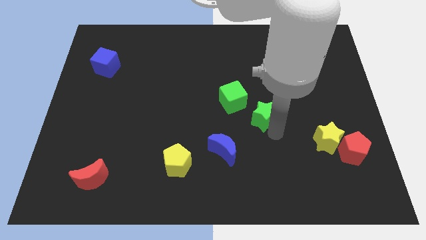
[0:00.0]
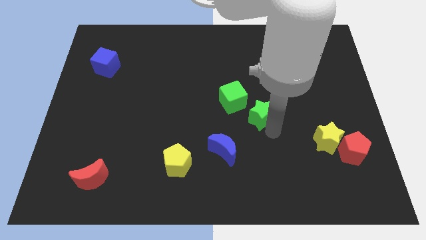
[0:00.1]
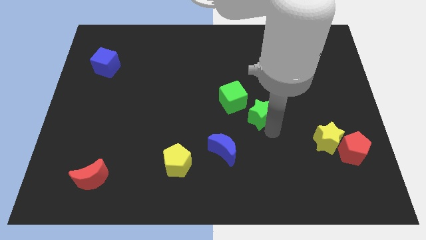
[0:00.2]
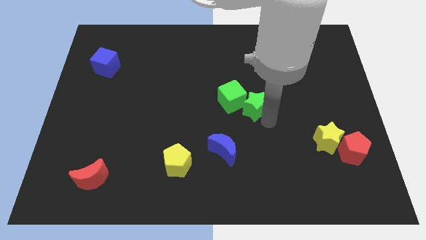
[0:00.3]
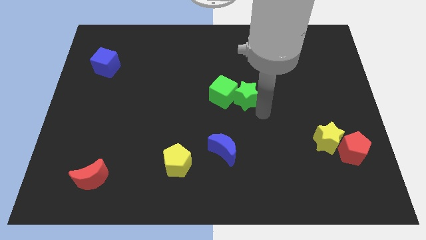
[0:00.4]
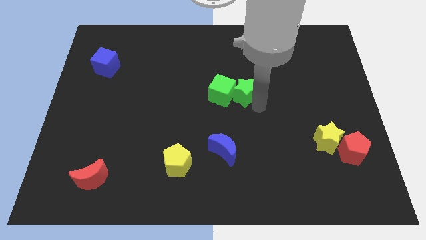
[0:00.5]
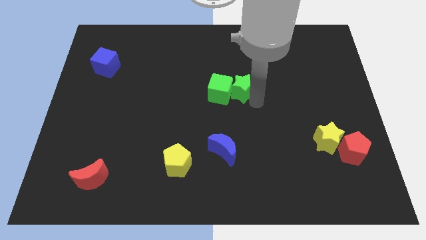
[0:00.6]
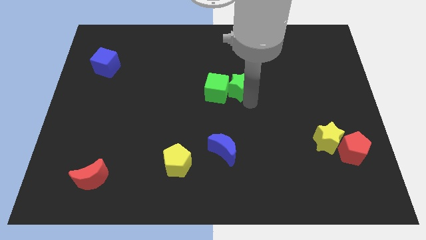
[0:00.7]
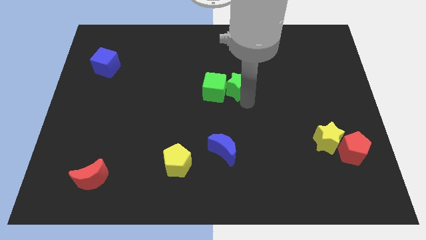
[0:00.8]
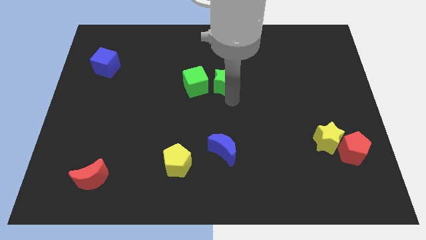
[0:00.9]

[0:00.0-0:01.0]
push the green cube and green star to the center

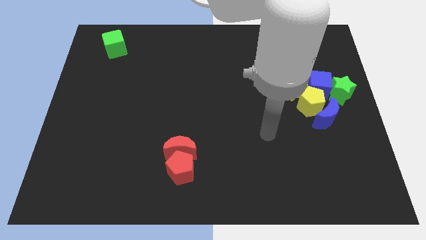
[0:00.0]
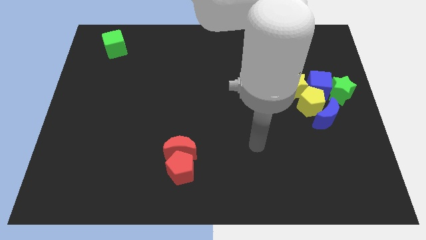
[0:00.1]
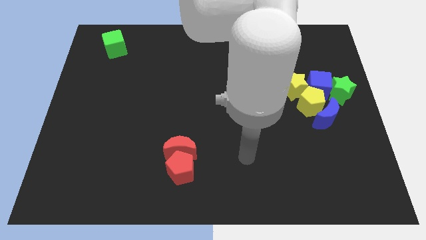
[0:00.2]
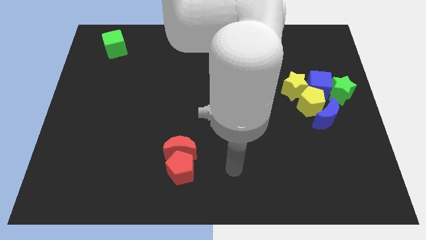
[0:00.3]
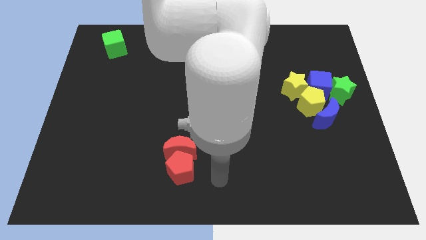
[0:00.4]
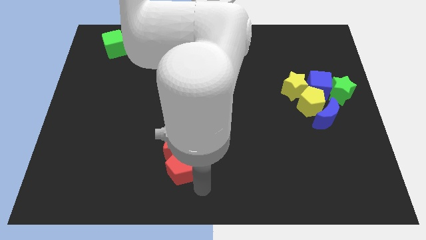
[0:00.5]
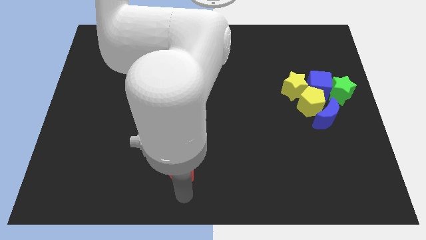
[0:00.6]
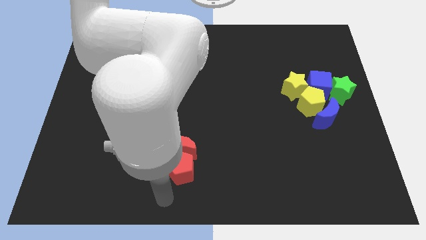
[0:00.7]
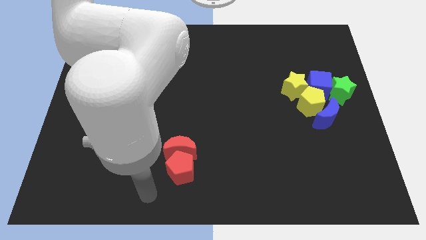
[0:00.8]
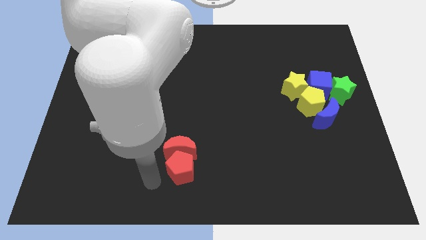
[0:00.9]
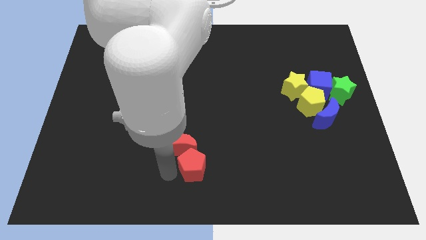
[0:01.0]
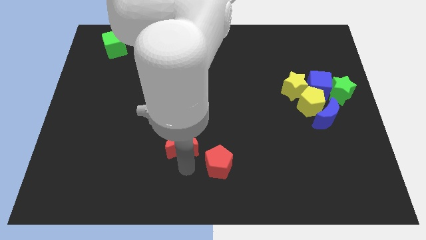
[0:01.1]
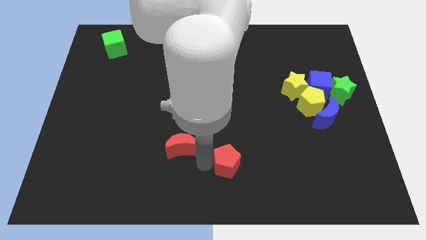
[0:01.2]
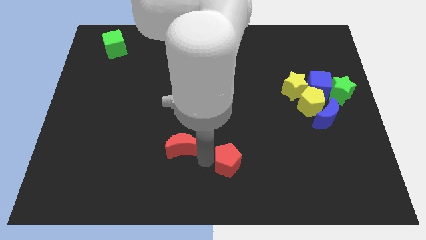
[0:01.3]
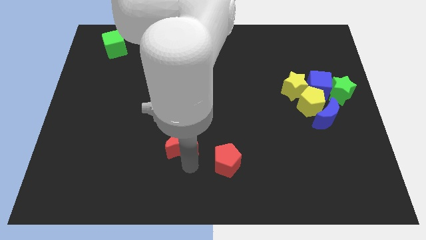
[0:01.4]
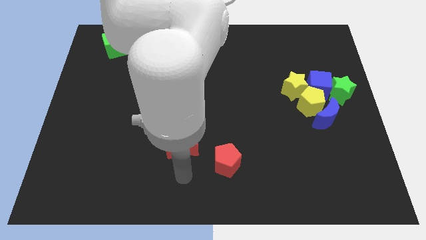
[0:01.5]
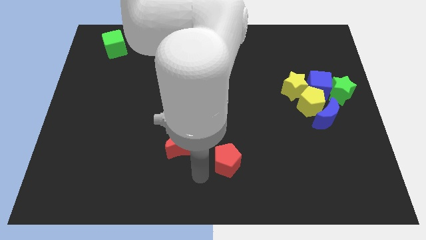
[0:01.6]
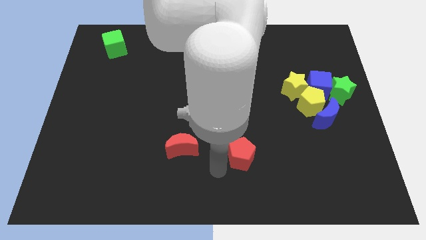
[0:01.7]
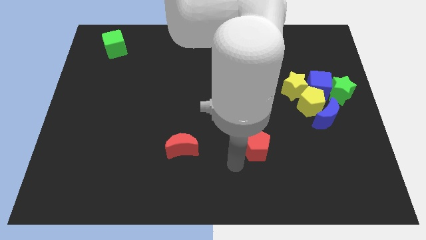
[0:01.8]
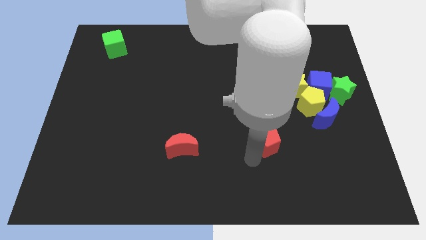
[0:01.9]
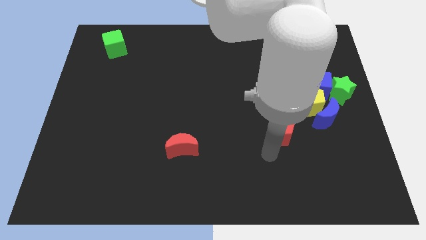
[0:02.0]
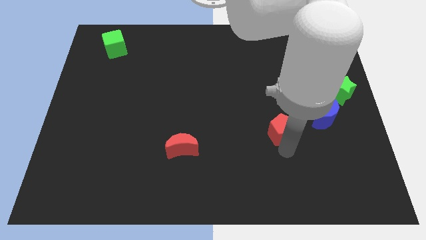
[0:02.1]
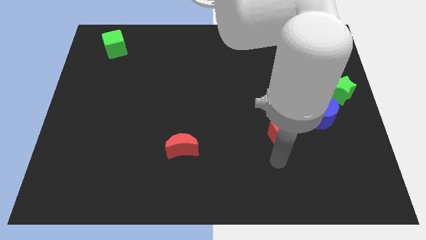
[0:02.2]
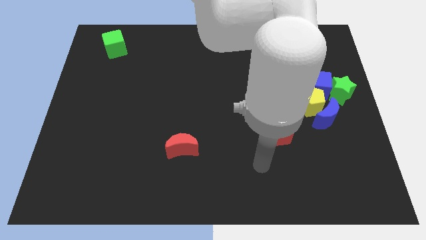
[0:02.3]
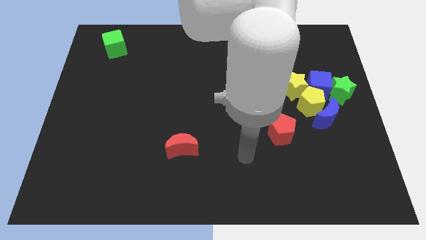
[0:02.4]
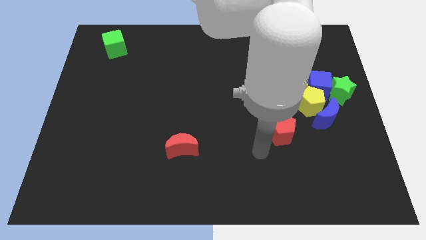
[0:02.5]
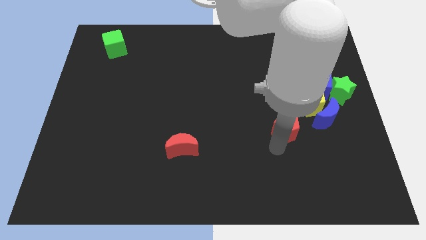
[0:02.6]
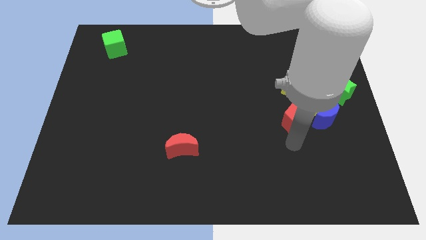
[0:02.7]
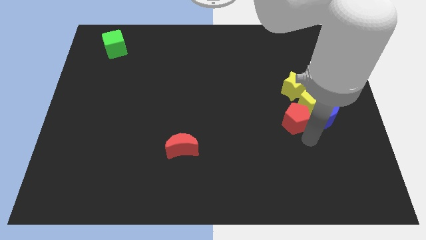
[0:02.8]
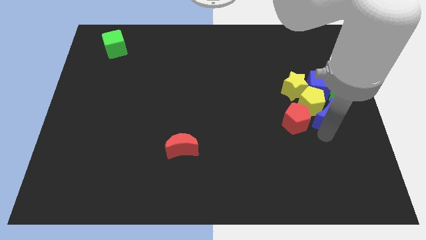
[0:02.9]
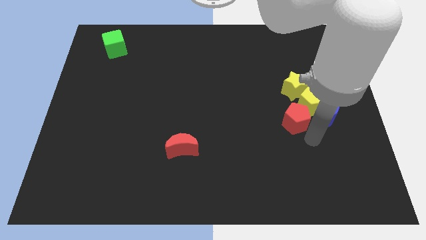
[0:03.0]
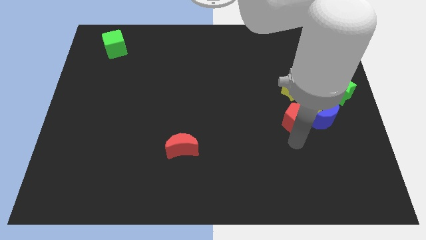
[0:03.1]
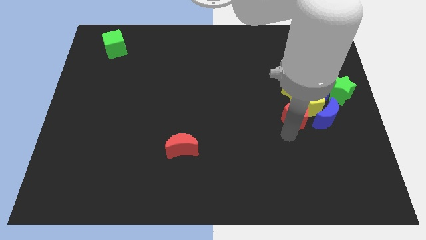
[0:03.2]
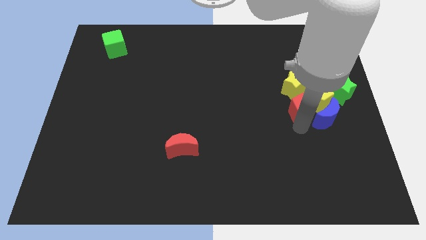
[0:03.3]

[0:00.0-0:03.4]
push the red pentagon close to the yellow pentagon

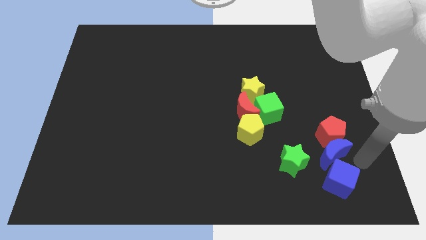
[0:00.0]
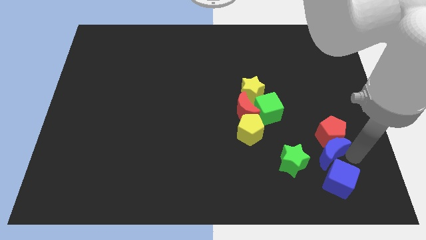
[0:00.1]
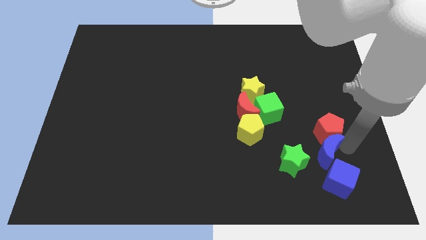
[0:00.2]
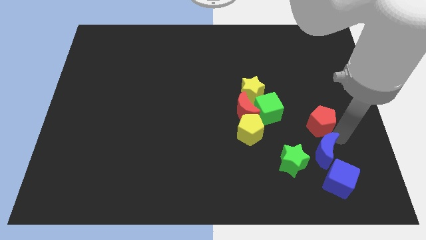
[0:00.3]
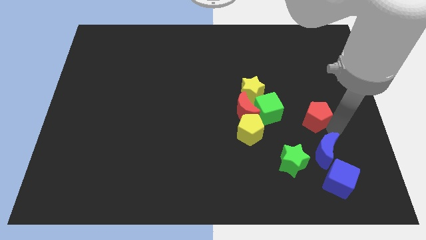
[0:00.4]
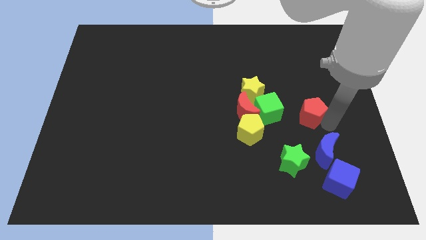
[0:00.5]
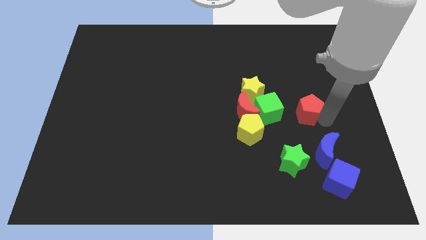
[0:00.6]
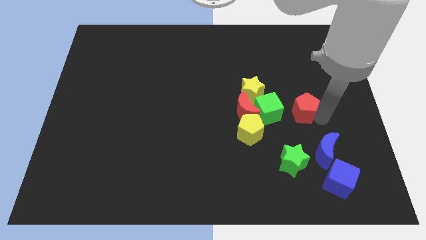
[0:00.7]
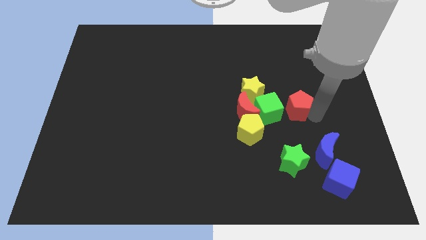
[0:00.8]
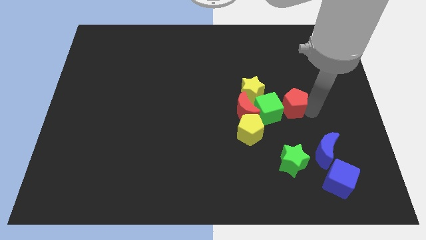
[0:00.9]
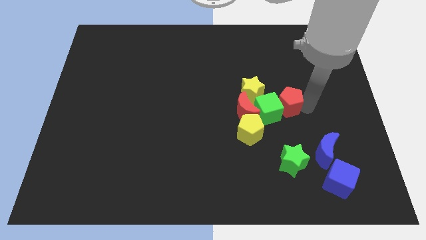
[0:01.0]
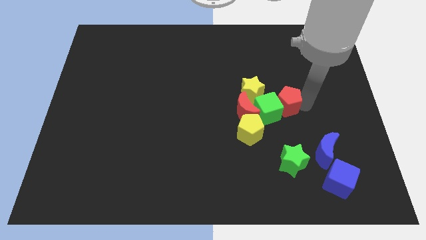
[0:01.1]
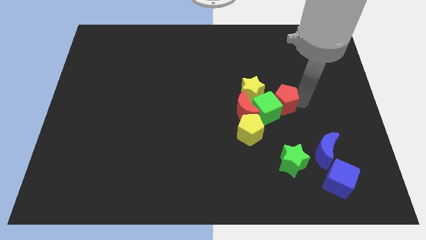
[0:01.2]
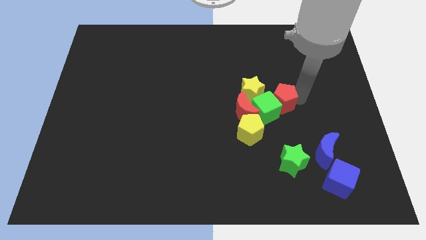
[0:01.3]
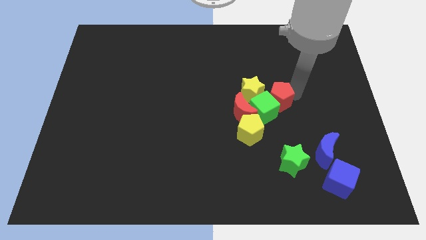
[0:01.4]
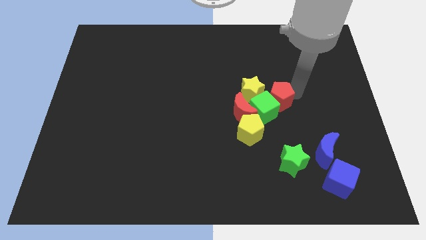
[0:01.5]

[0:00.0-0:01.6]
move the red pentagon into the green cube

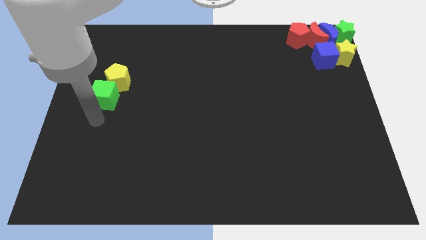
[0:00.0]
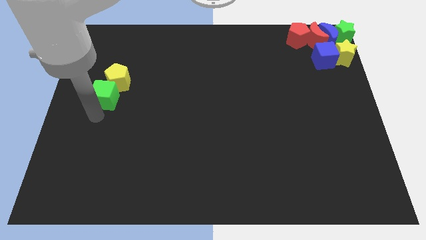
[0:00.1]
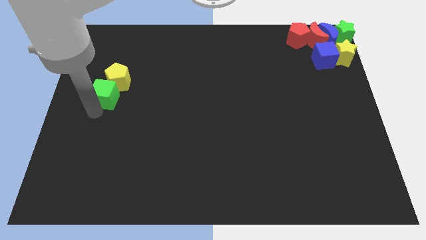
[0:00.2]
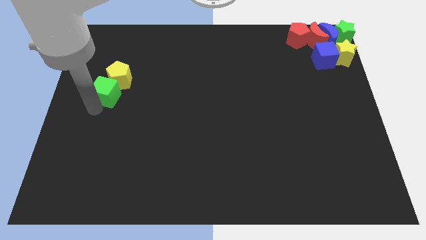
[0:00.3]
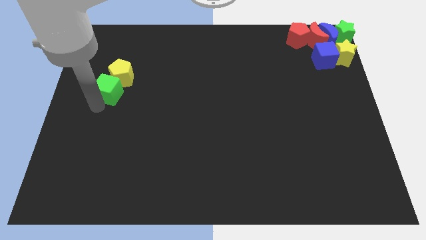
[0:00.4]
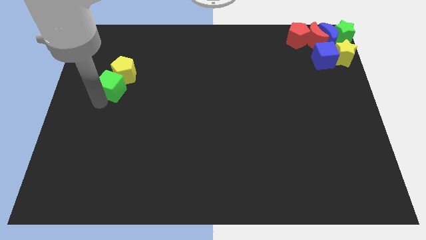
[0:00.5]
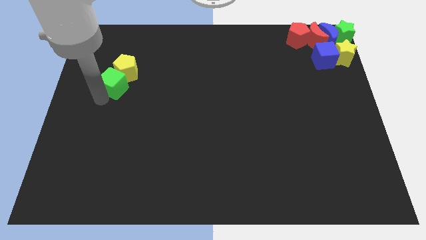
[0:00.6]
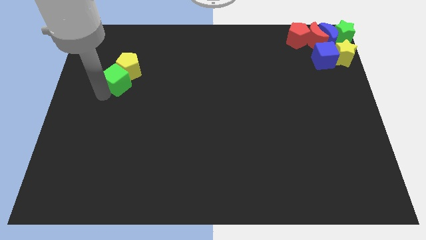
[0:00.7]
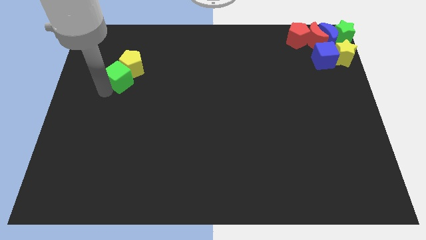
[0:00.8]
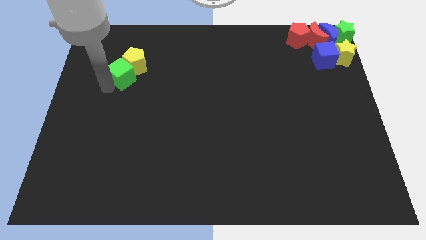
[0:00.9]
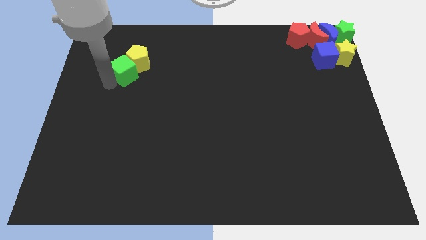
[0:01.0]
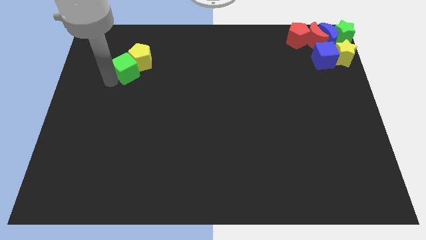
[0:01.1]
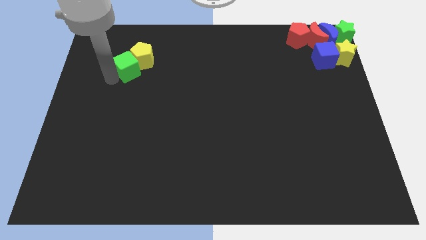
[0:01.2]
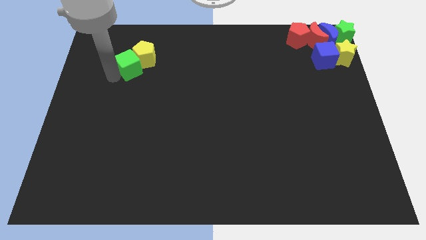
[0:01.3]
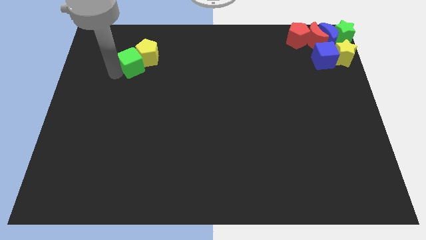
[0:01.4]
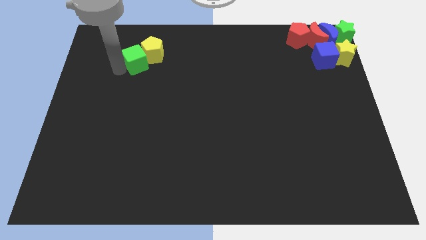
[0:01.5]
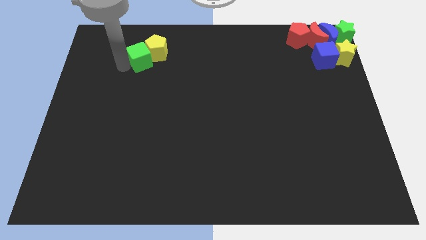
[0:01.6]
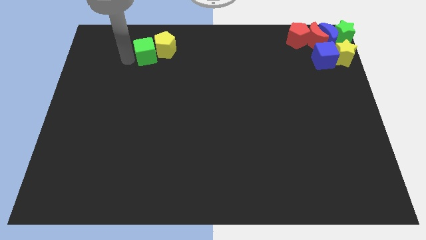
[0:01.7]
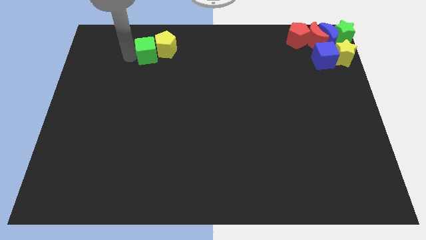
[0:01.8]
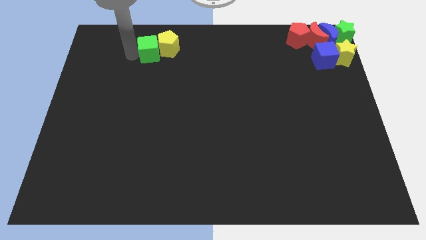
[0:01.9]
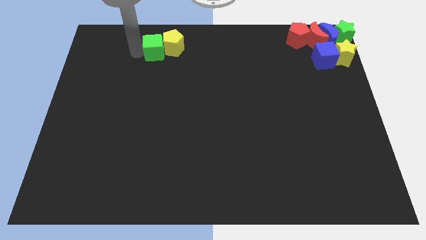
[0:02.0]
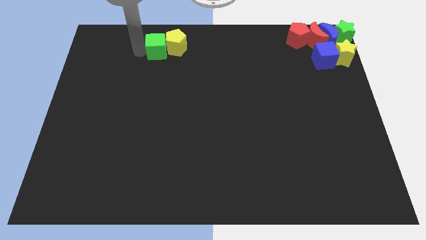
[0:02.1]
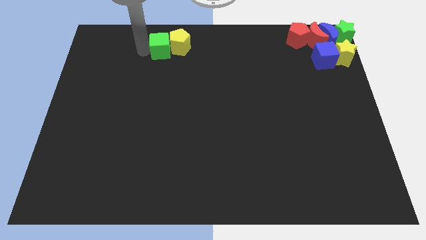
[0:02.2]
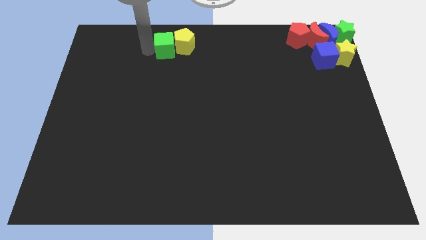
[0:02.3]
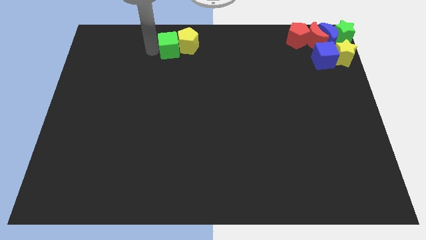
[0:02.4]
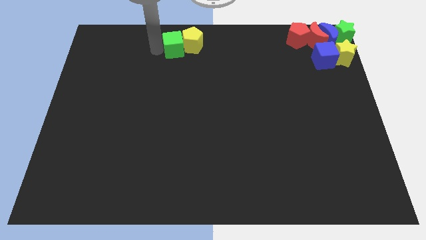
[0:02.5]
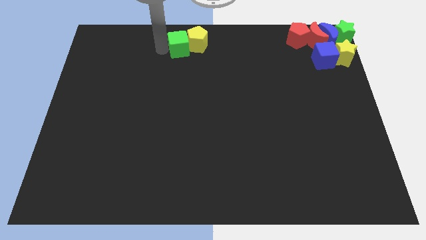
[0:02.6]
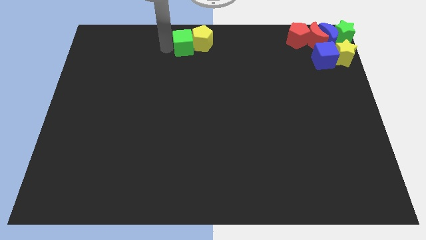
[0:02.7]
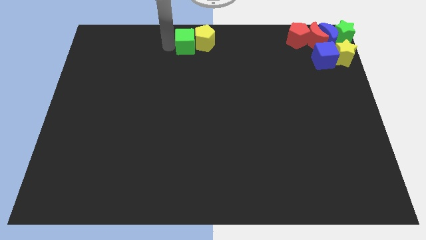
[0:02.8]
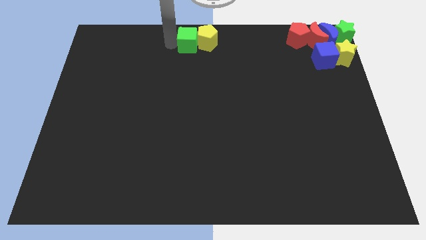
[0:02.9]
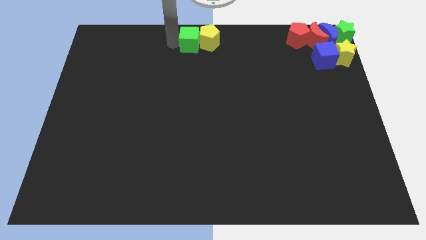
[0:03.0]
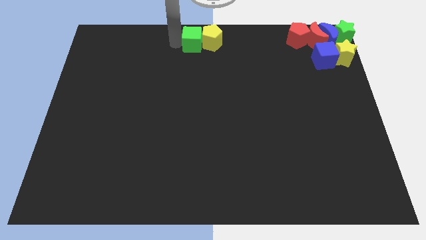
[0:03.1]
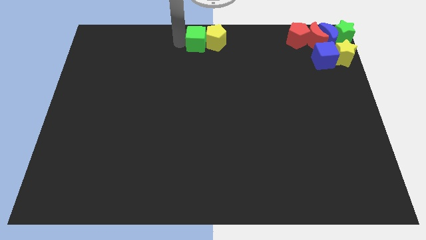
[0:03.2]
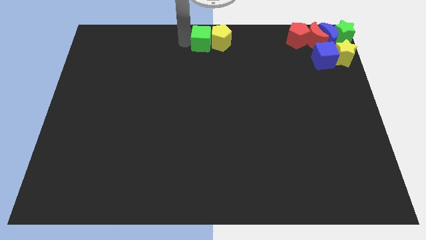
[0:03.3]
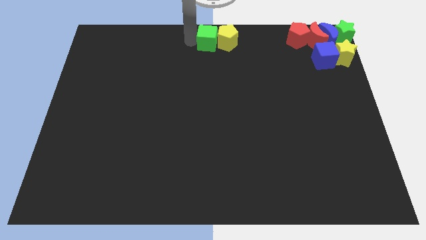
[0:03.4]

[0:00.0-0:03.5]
push green cube along with yellow pentagon to the top centre of board
